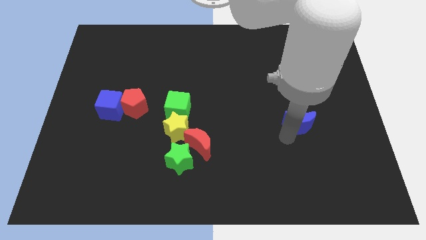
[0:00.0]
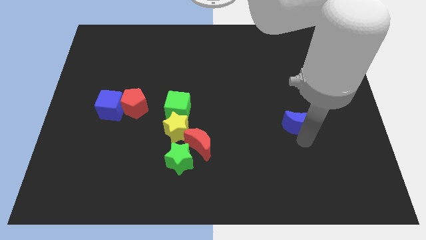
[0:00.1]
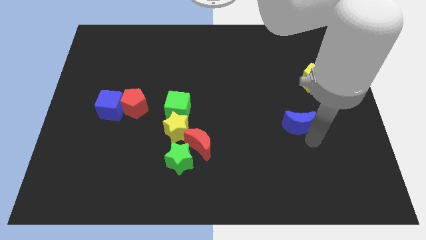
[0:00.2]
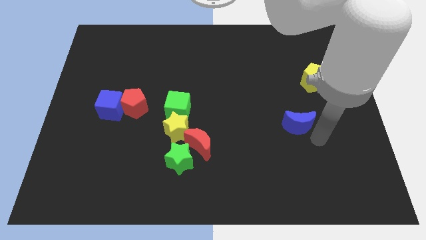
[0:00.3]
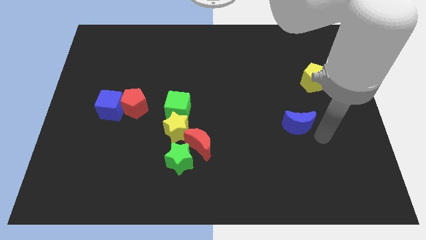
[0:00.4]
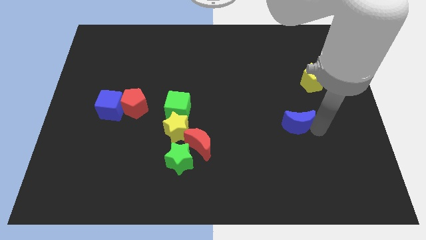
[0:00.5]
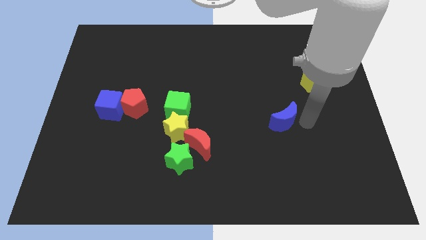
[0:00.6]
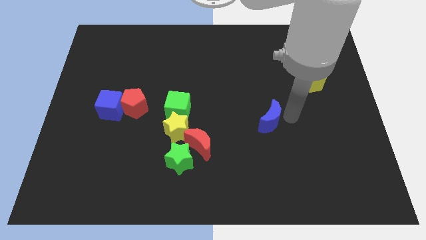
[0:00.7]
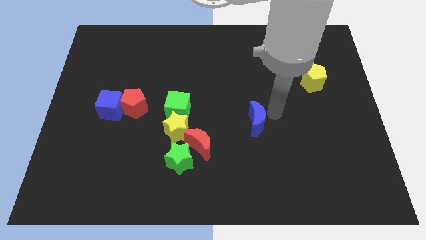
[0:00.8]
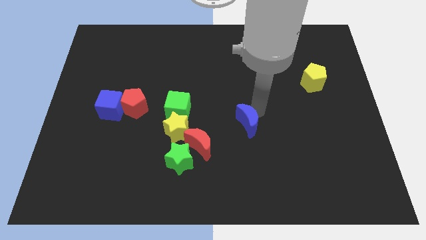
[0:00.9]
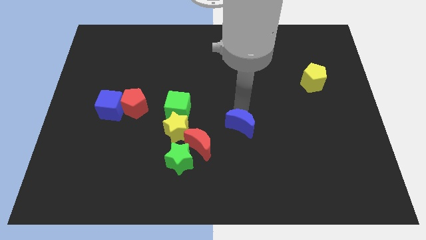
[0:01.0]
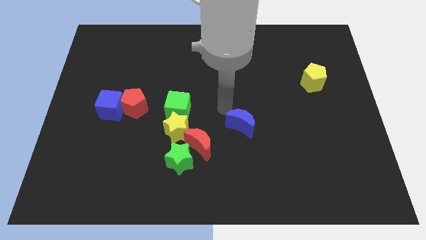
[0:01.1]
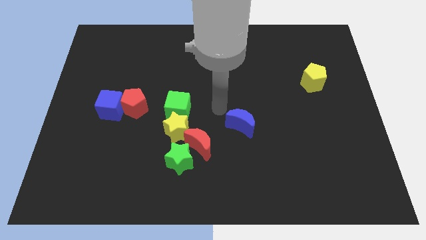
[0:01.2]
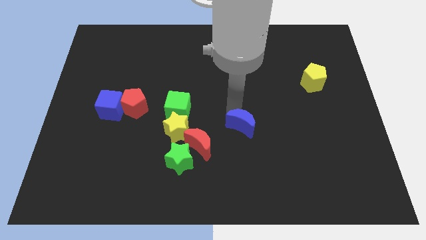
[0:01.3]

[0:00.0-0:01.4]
move the blue crescent diagonally in between the yellow pentagon and red crescent

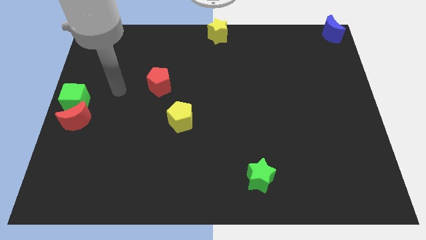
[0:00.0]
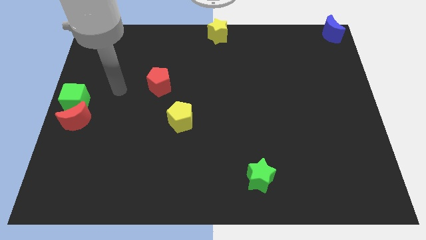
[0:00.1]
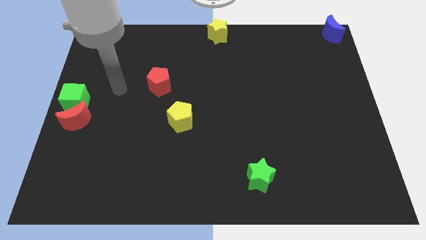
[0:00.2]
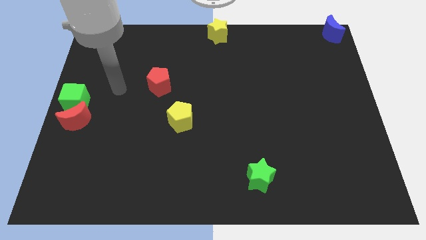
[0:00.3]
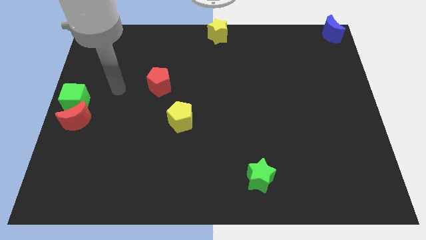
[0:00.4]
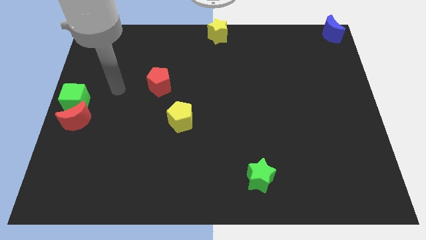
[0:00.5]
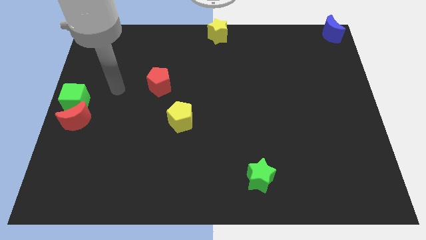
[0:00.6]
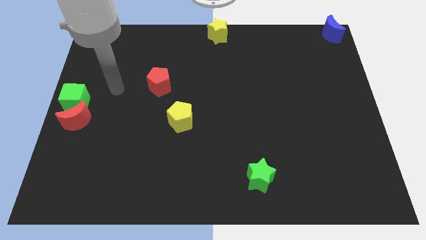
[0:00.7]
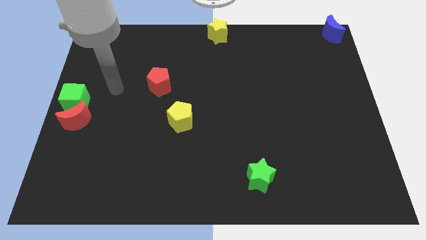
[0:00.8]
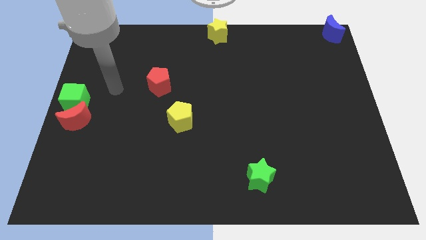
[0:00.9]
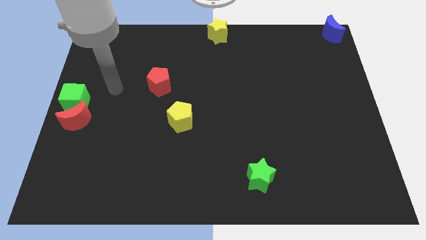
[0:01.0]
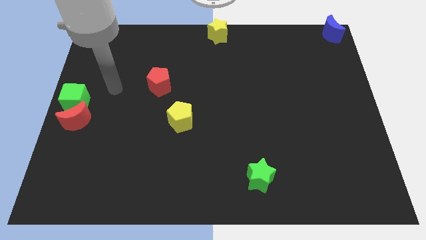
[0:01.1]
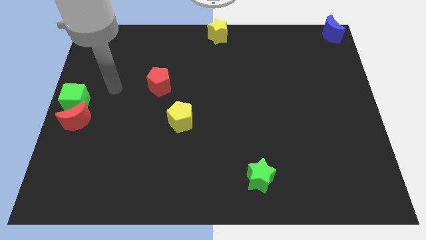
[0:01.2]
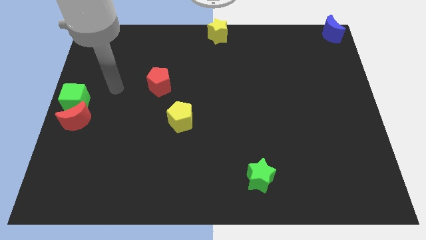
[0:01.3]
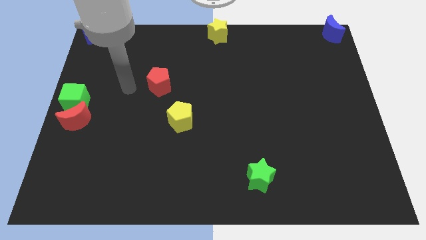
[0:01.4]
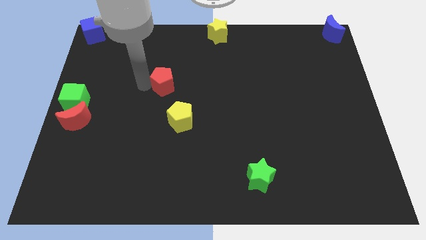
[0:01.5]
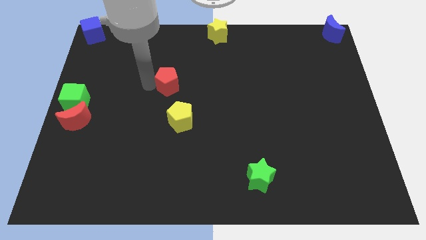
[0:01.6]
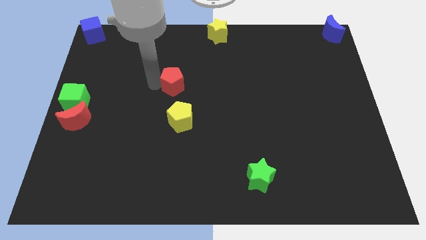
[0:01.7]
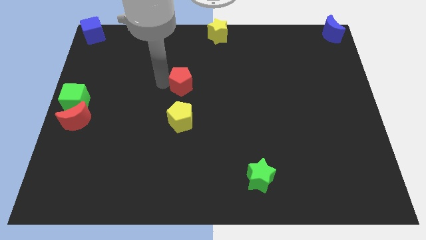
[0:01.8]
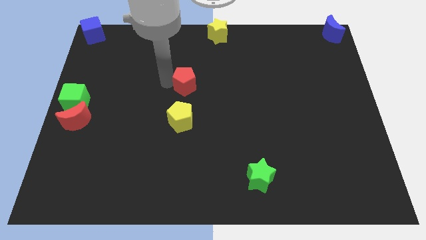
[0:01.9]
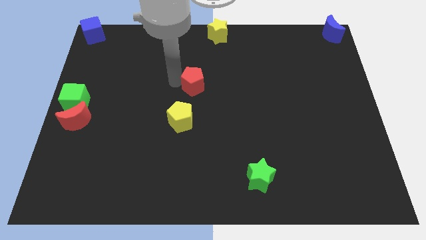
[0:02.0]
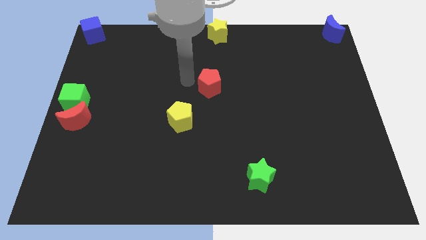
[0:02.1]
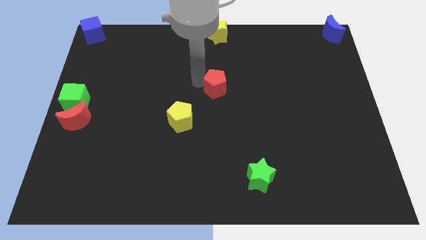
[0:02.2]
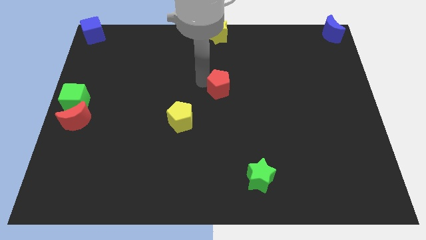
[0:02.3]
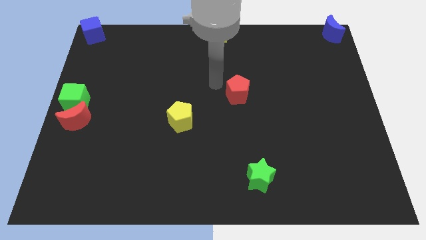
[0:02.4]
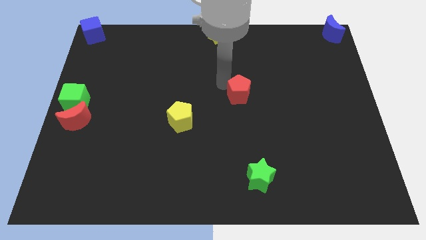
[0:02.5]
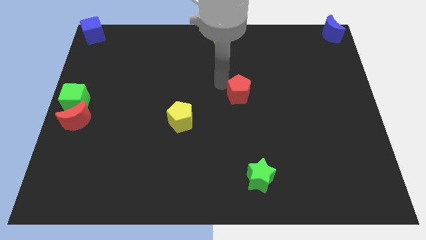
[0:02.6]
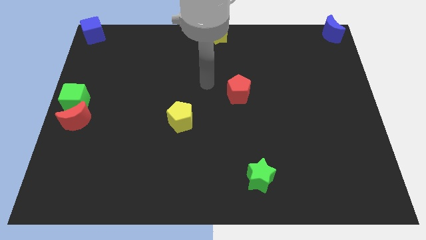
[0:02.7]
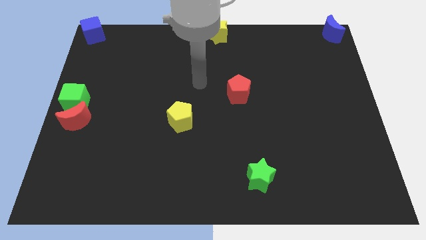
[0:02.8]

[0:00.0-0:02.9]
push the red pentagon to the center of the board

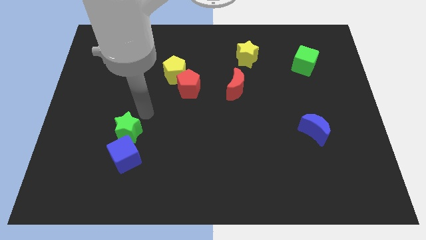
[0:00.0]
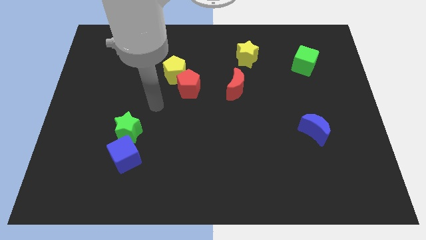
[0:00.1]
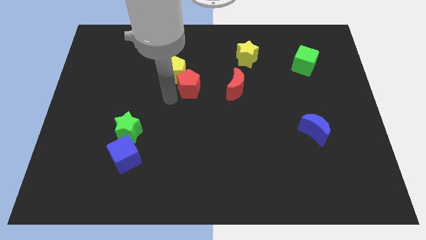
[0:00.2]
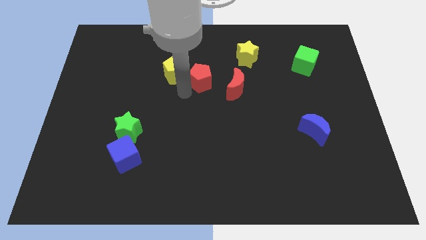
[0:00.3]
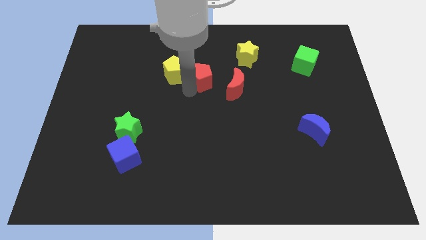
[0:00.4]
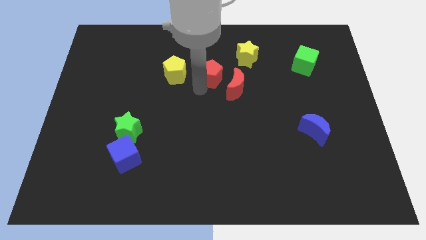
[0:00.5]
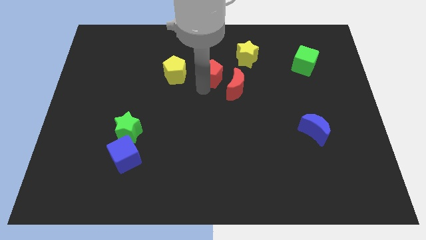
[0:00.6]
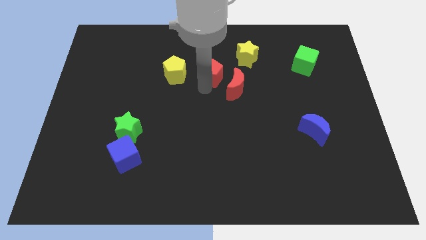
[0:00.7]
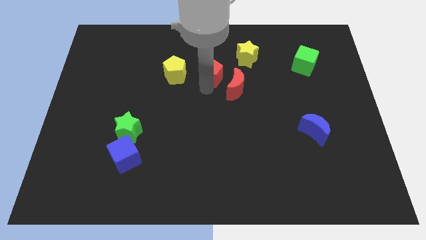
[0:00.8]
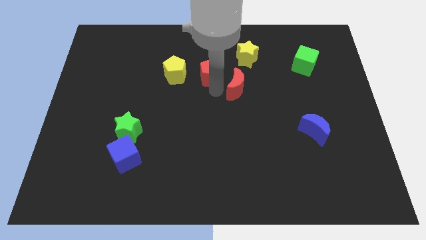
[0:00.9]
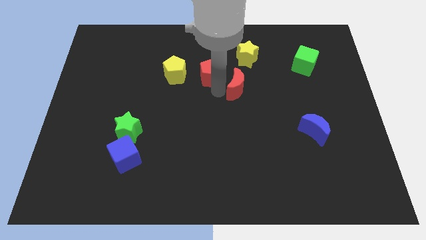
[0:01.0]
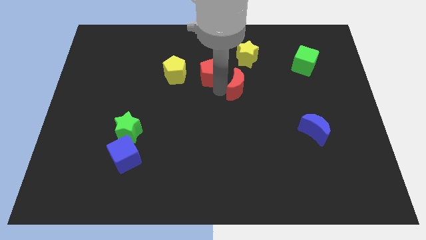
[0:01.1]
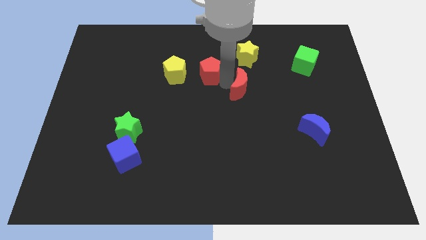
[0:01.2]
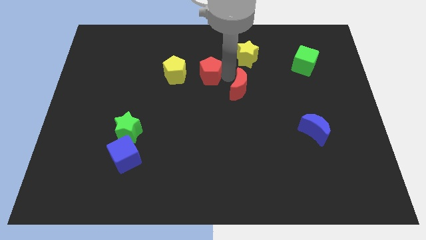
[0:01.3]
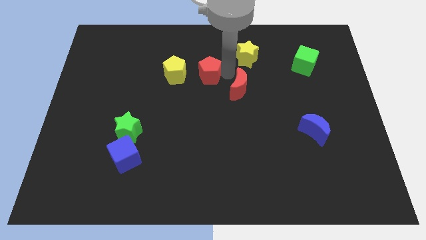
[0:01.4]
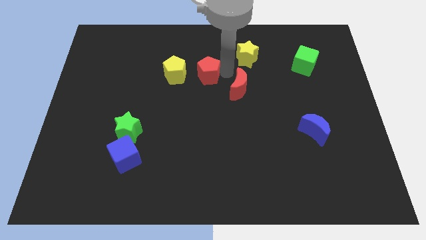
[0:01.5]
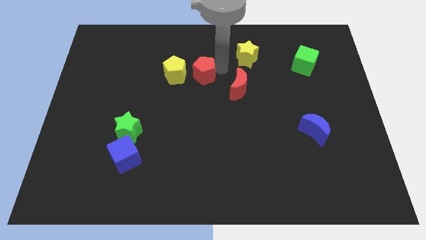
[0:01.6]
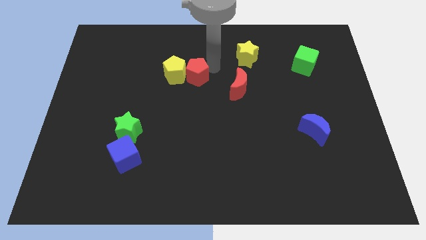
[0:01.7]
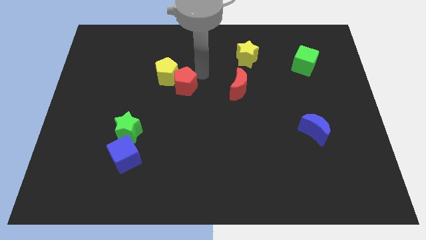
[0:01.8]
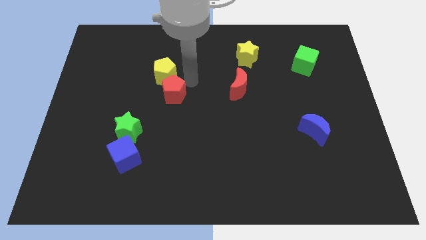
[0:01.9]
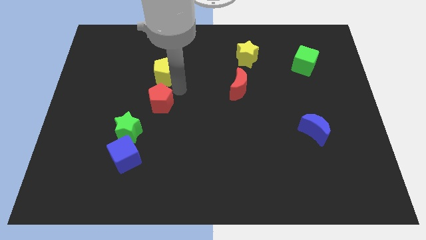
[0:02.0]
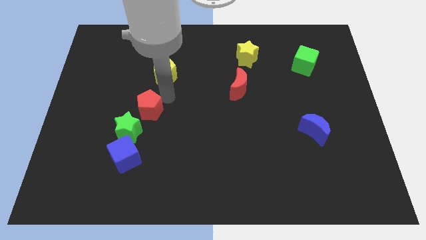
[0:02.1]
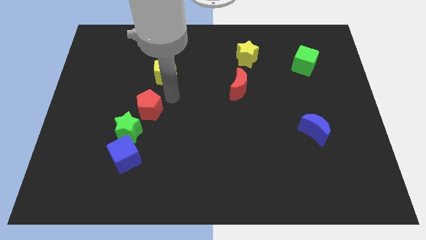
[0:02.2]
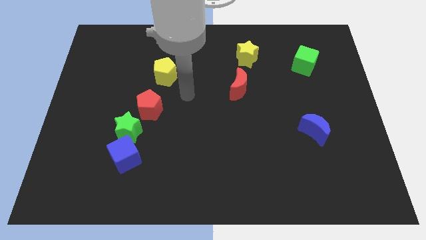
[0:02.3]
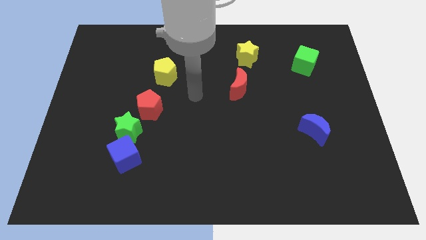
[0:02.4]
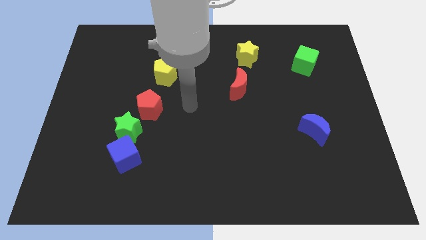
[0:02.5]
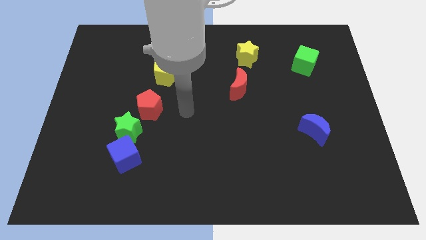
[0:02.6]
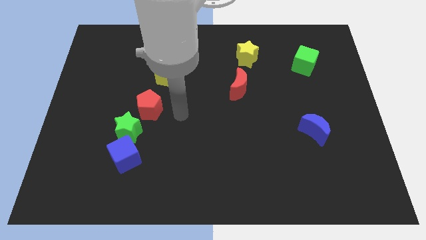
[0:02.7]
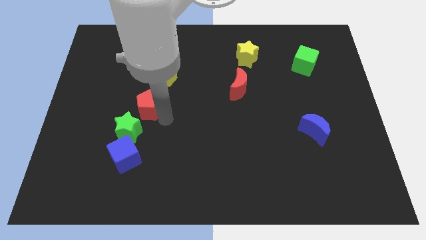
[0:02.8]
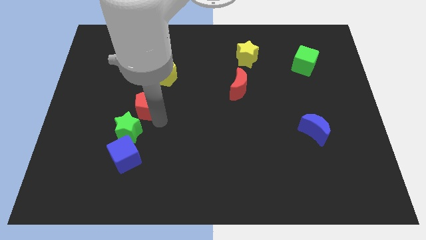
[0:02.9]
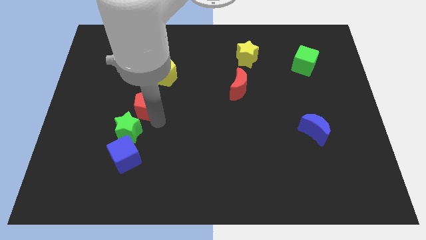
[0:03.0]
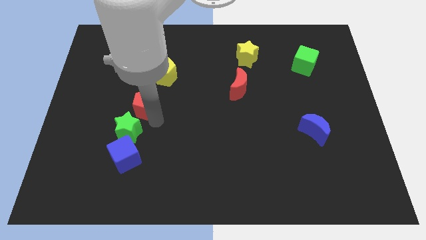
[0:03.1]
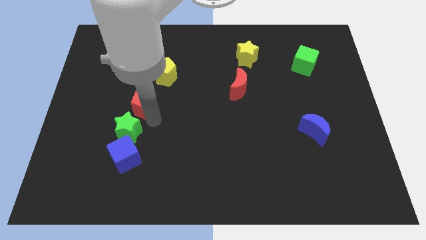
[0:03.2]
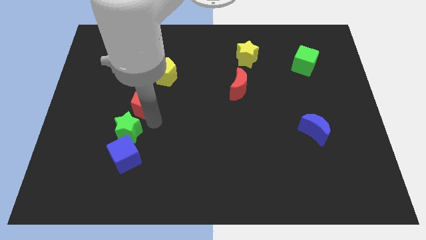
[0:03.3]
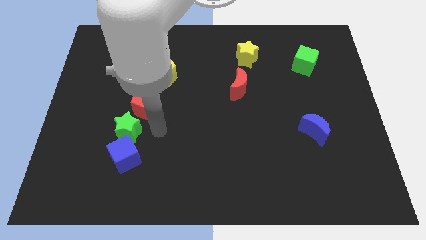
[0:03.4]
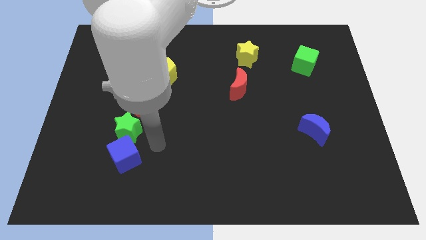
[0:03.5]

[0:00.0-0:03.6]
move the red pentagon to the top of the blue cube

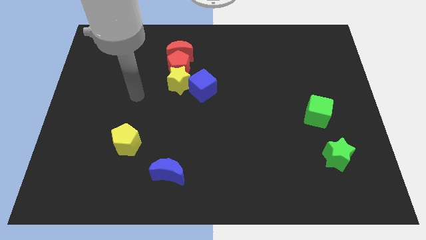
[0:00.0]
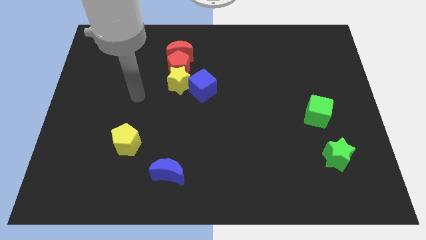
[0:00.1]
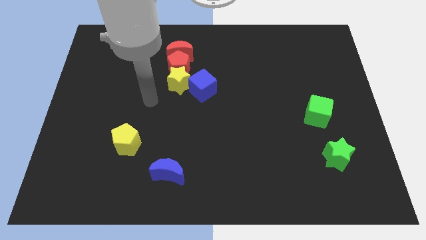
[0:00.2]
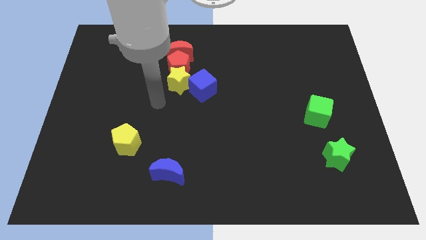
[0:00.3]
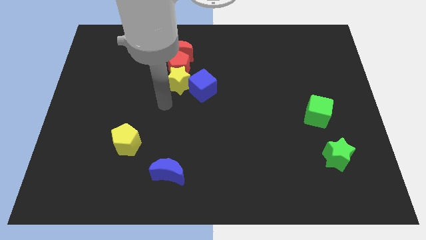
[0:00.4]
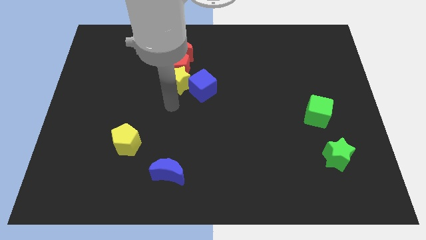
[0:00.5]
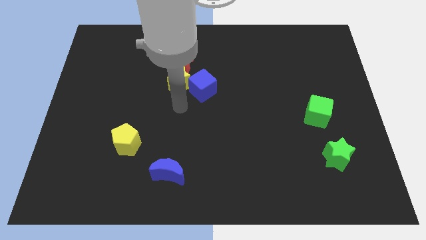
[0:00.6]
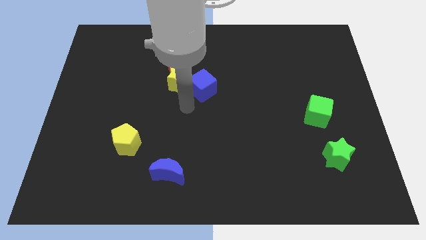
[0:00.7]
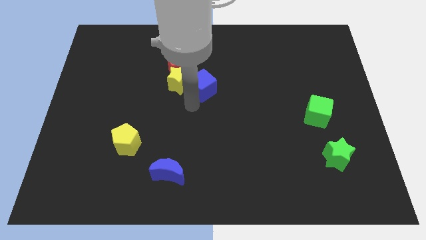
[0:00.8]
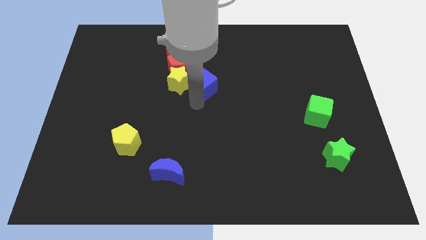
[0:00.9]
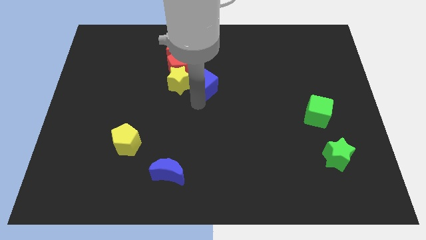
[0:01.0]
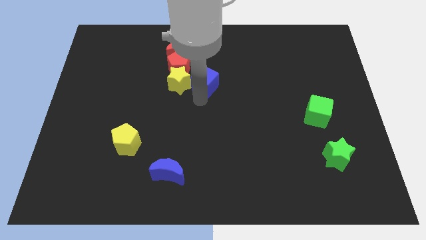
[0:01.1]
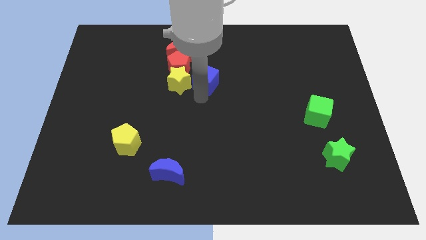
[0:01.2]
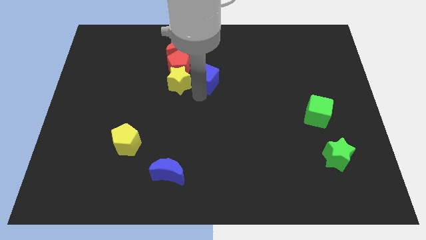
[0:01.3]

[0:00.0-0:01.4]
slightly push the blue cube to the right of yellow star
